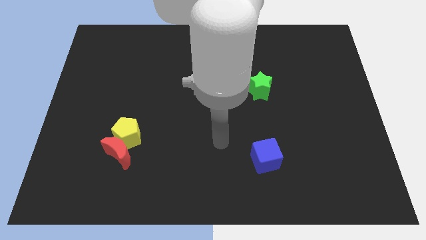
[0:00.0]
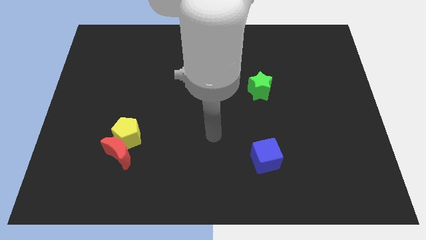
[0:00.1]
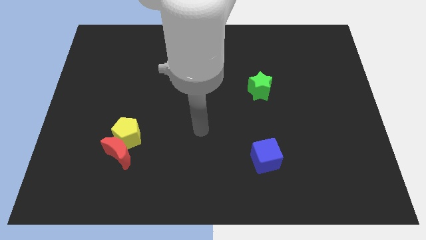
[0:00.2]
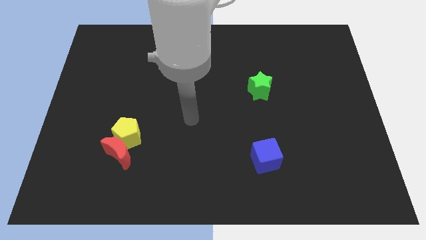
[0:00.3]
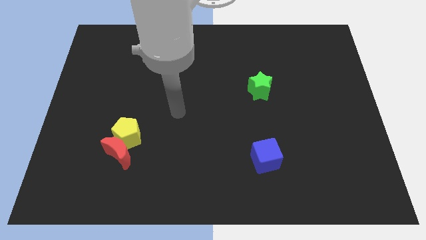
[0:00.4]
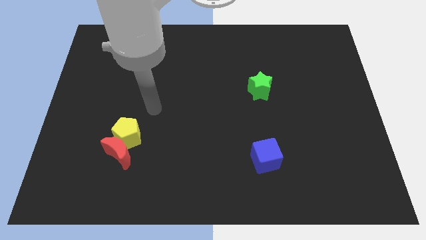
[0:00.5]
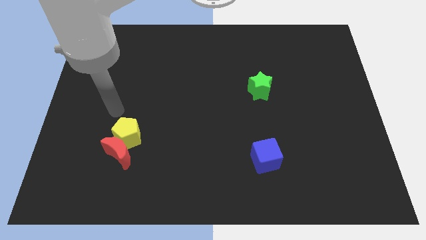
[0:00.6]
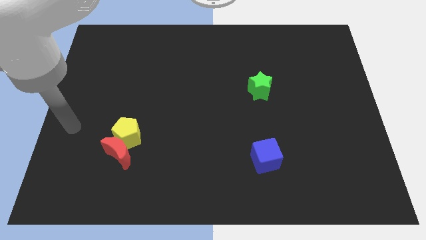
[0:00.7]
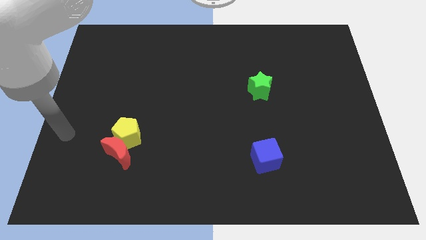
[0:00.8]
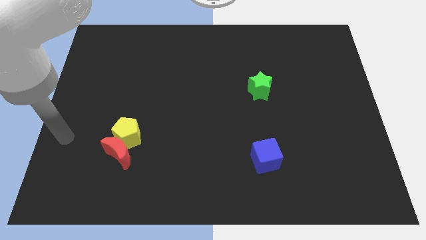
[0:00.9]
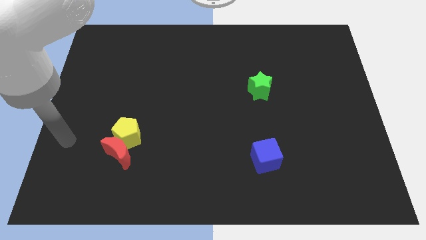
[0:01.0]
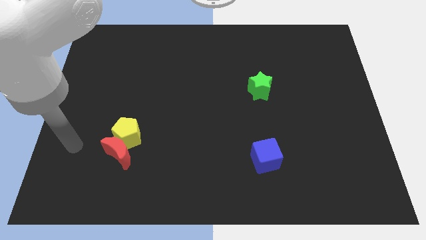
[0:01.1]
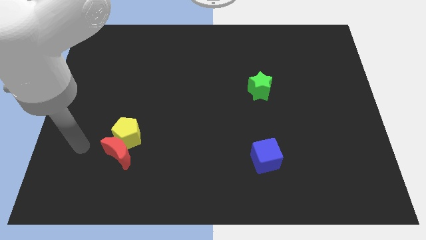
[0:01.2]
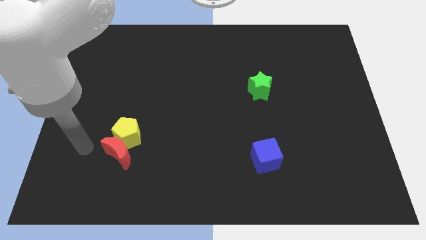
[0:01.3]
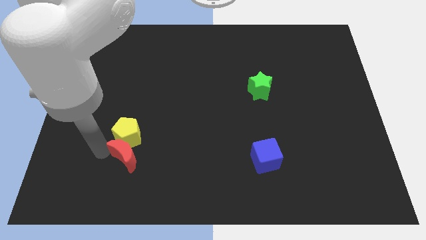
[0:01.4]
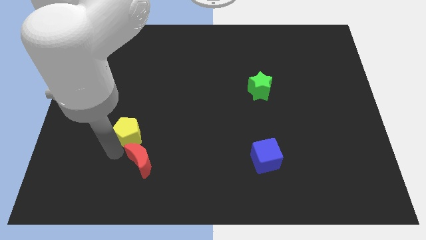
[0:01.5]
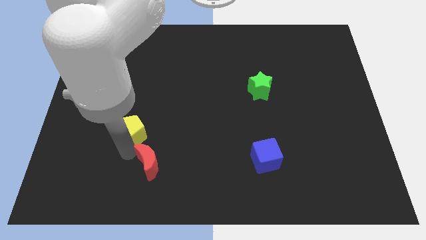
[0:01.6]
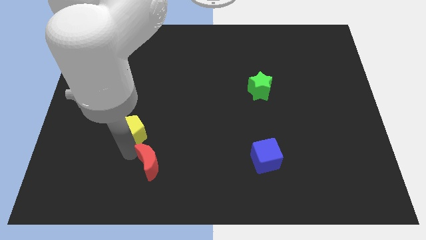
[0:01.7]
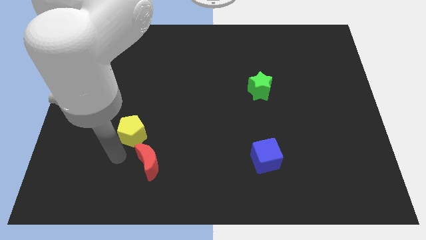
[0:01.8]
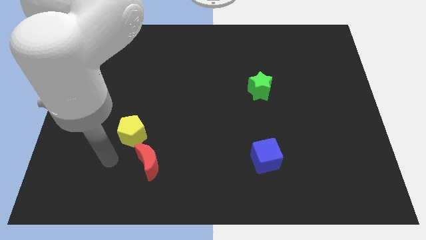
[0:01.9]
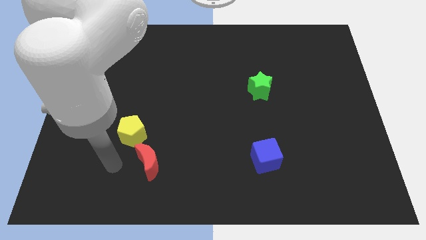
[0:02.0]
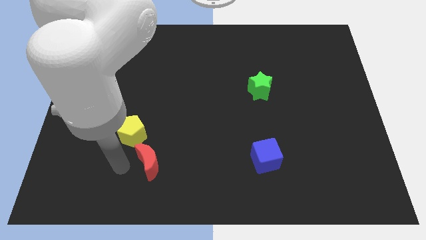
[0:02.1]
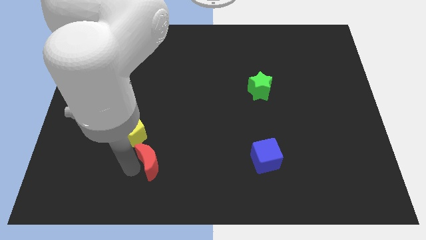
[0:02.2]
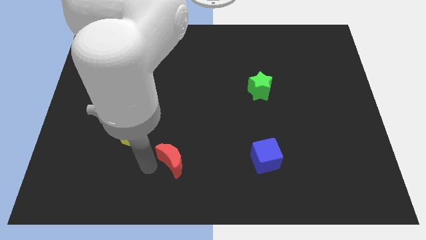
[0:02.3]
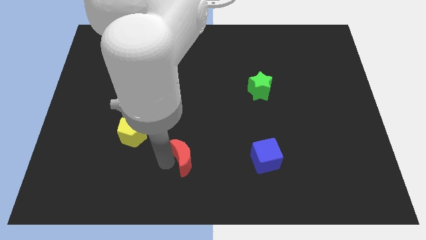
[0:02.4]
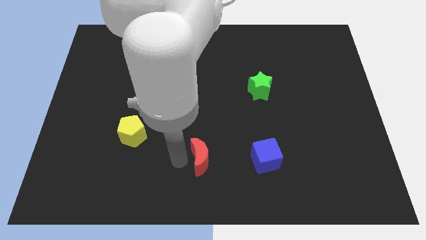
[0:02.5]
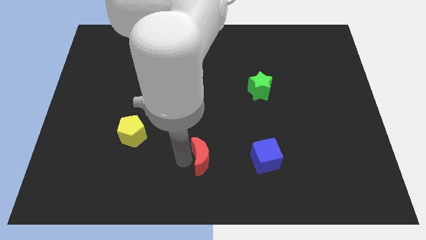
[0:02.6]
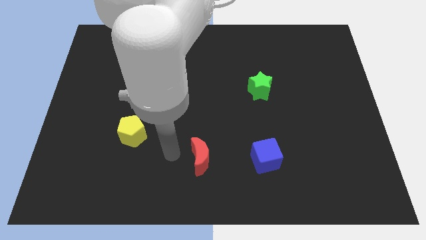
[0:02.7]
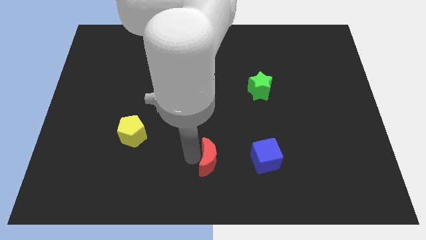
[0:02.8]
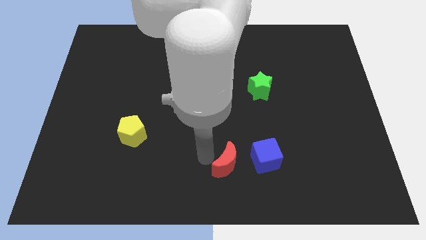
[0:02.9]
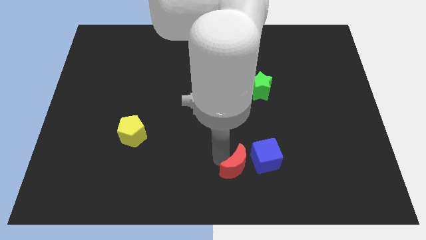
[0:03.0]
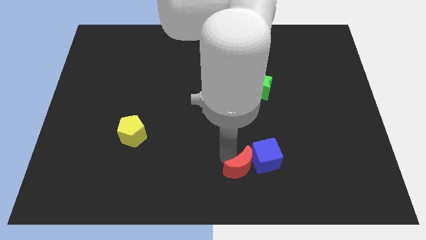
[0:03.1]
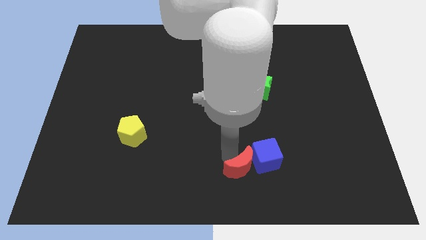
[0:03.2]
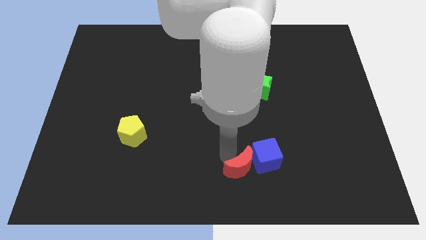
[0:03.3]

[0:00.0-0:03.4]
push the moon to the cube

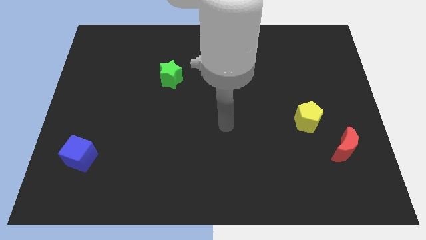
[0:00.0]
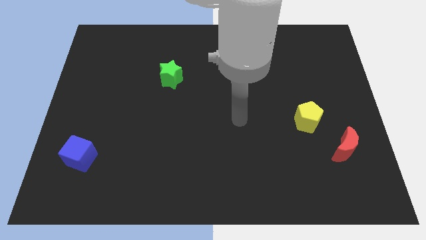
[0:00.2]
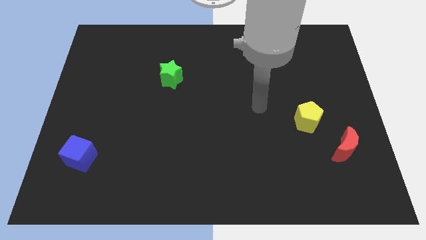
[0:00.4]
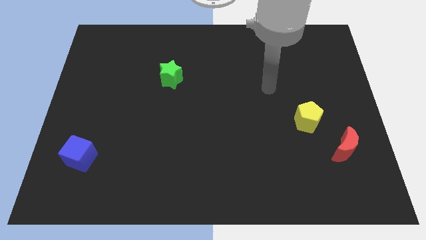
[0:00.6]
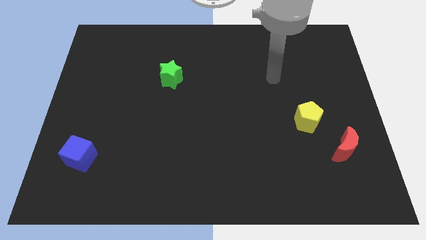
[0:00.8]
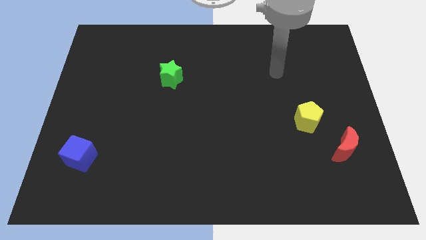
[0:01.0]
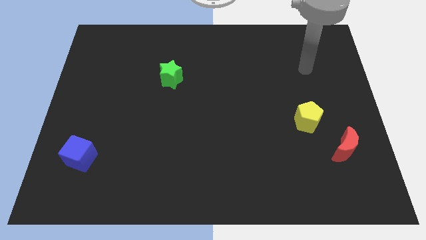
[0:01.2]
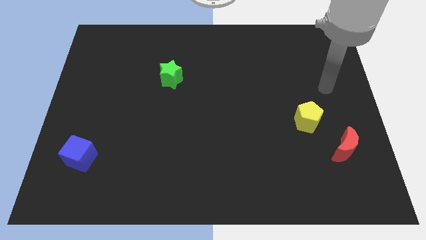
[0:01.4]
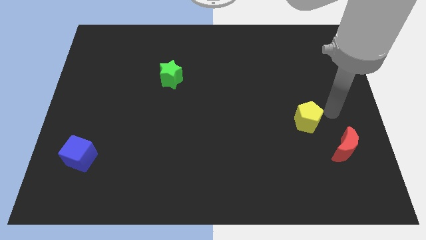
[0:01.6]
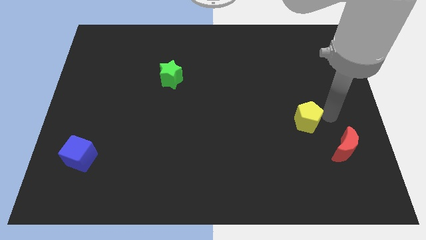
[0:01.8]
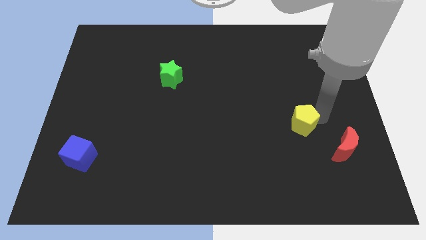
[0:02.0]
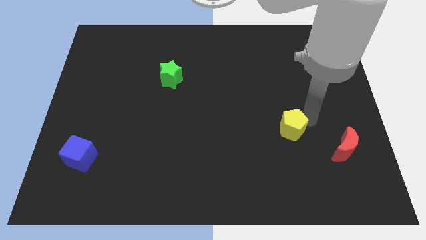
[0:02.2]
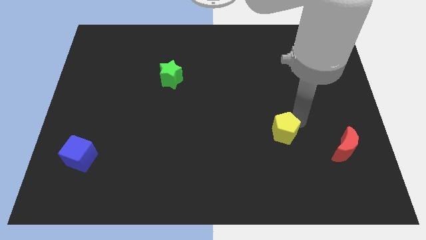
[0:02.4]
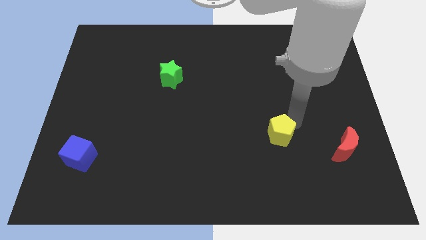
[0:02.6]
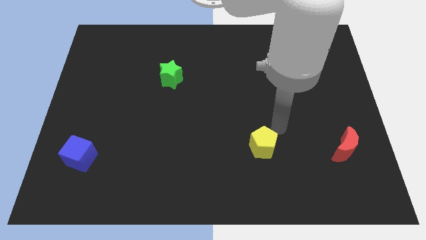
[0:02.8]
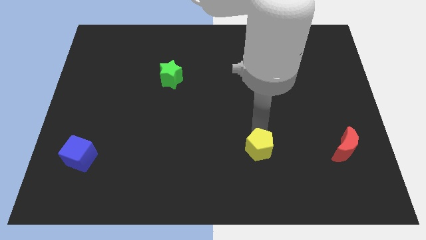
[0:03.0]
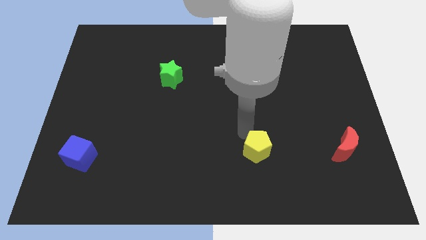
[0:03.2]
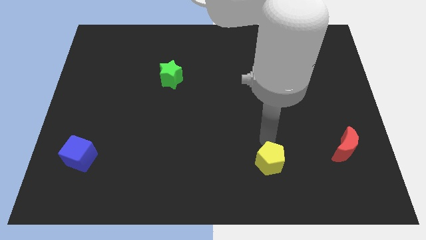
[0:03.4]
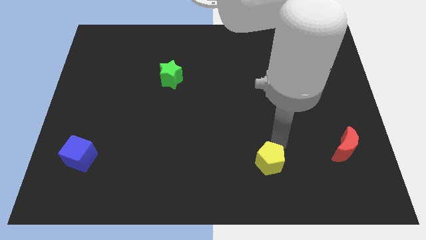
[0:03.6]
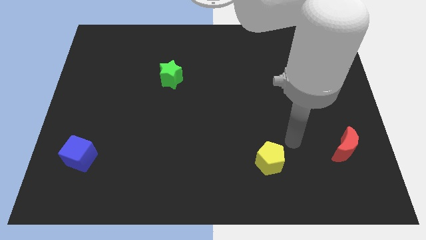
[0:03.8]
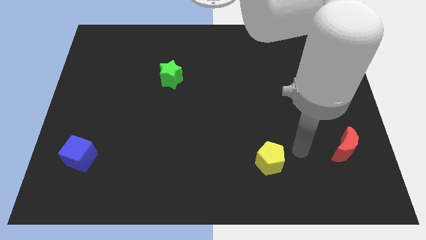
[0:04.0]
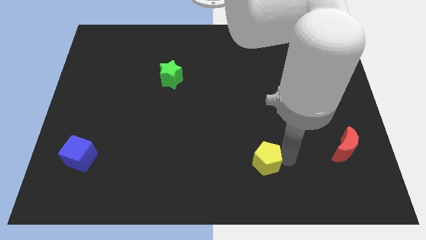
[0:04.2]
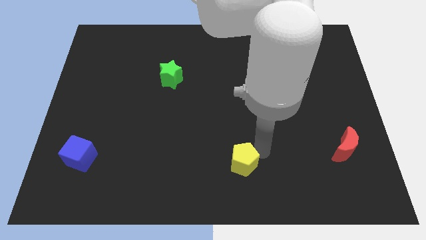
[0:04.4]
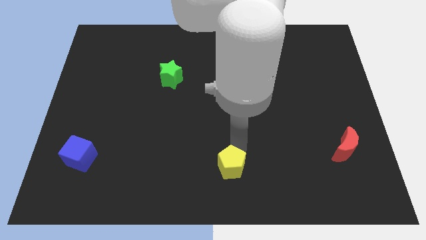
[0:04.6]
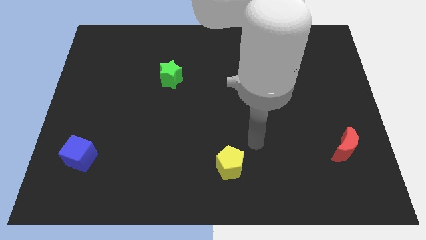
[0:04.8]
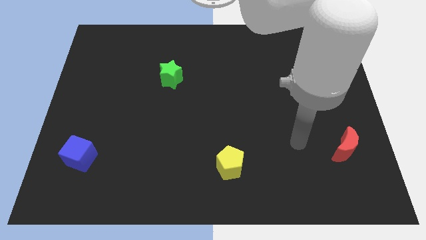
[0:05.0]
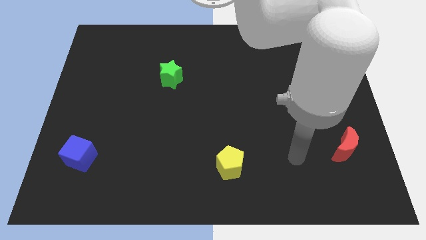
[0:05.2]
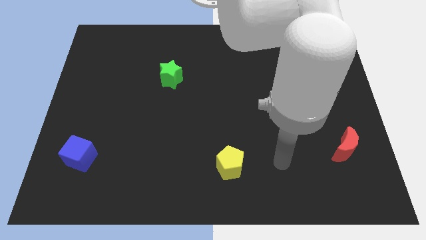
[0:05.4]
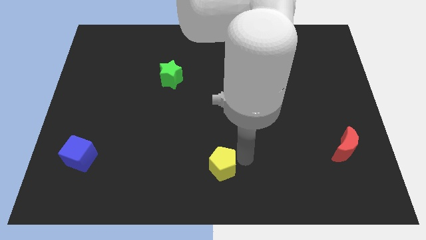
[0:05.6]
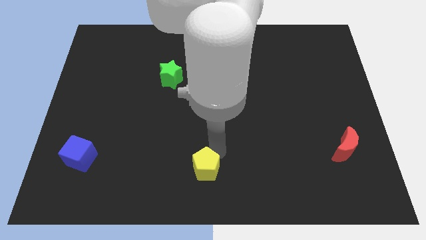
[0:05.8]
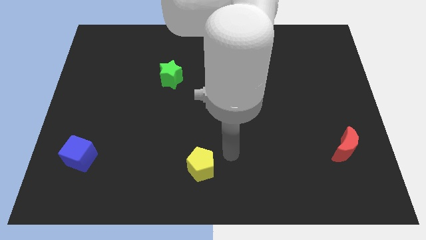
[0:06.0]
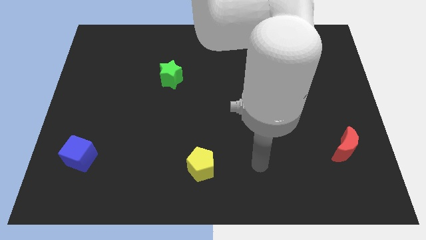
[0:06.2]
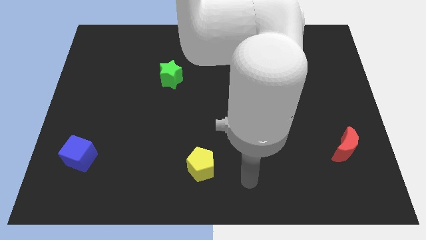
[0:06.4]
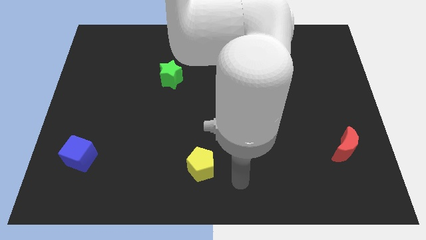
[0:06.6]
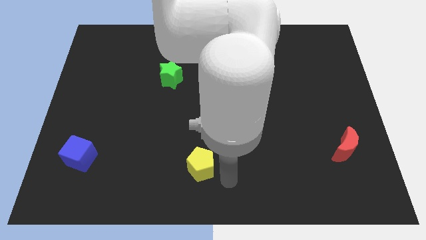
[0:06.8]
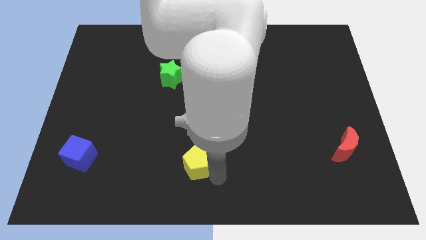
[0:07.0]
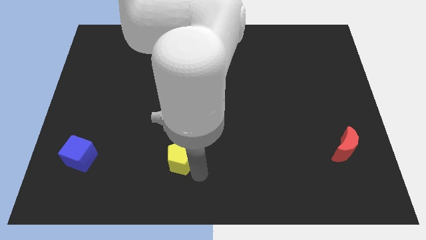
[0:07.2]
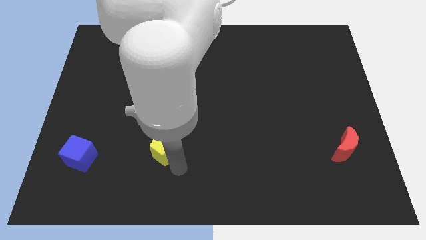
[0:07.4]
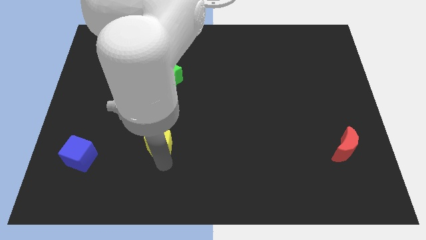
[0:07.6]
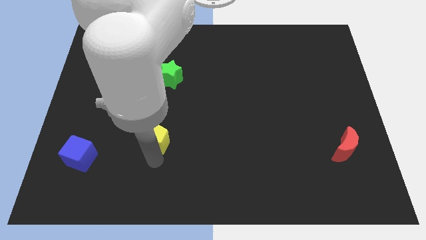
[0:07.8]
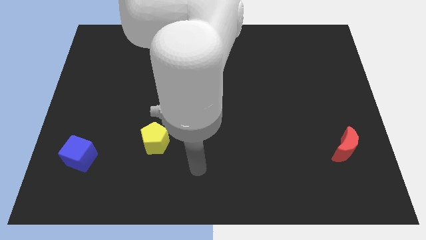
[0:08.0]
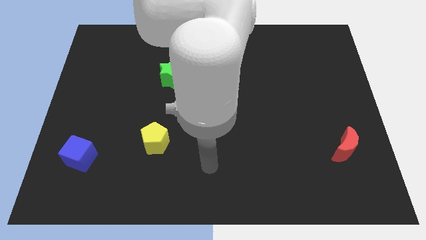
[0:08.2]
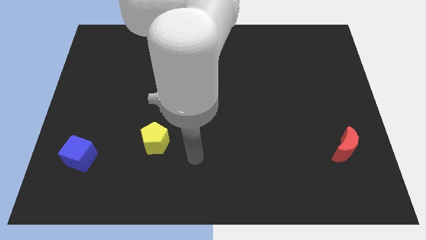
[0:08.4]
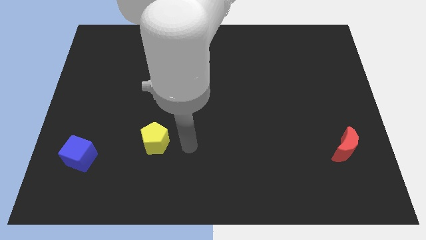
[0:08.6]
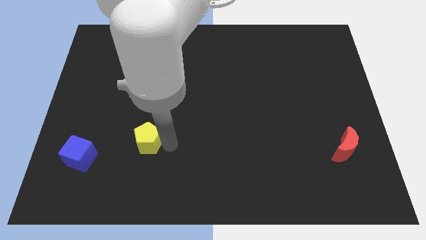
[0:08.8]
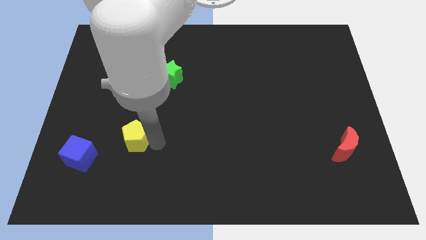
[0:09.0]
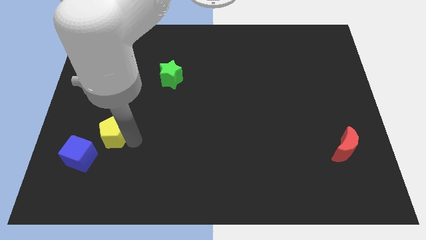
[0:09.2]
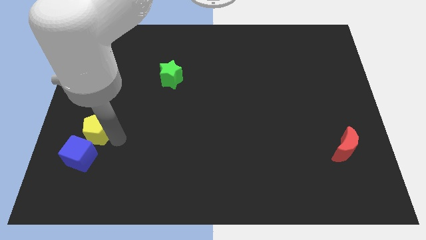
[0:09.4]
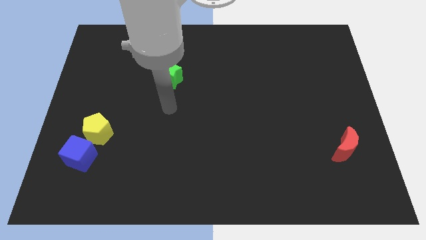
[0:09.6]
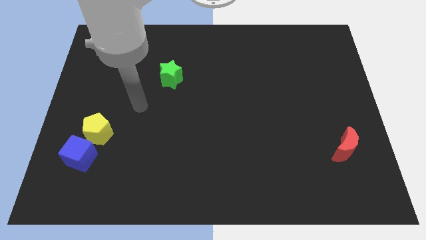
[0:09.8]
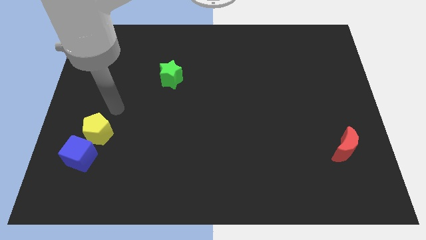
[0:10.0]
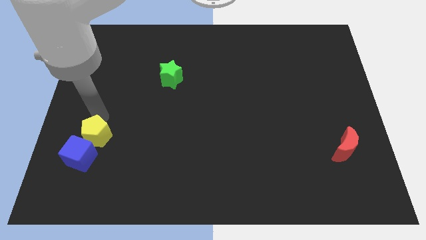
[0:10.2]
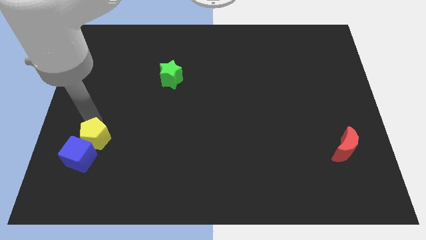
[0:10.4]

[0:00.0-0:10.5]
push the yellow pentagon to the cube
